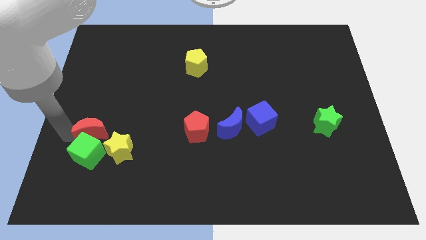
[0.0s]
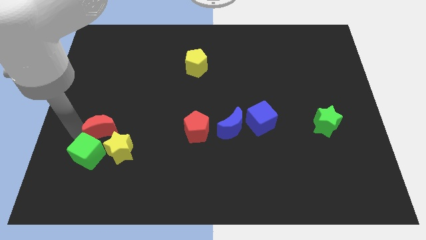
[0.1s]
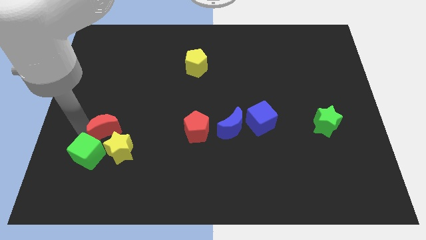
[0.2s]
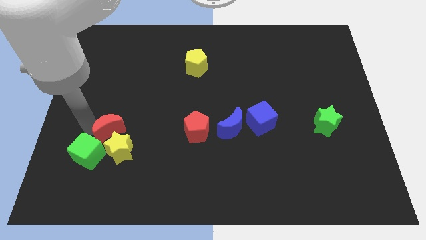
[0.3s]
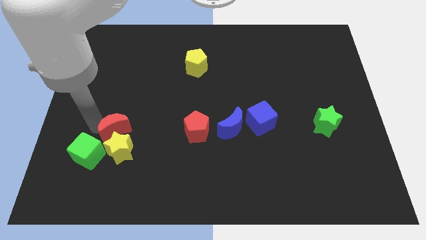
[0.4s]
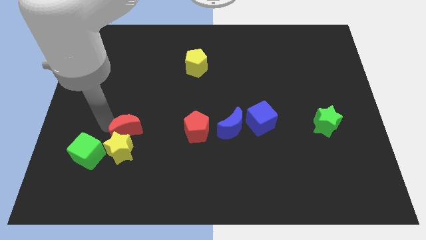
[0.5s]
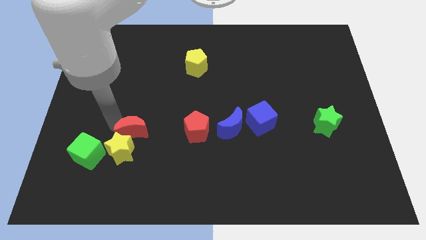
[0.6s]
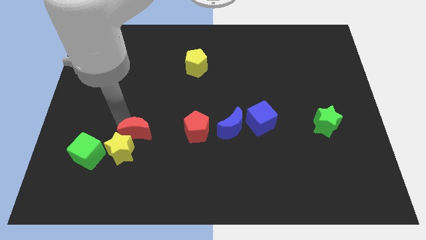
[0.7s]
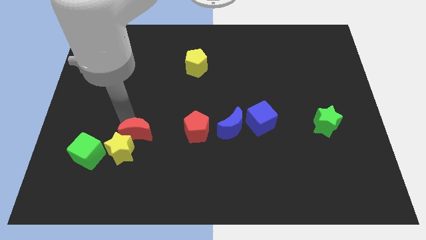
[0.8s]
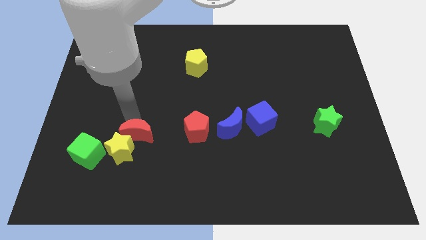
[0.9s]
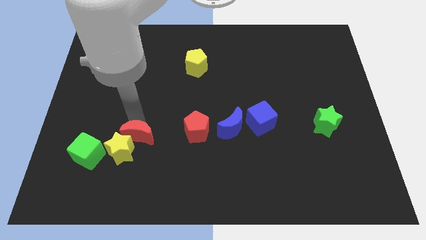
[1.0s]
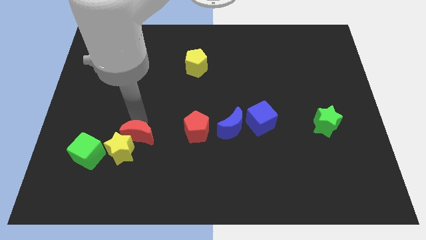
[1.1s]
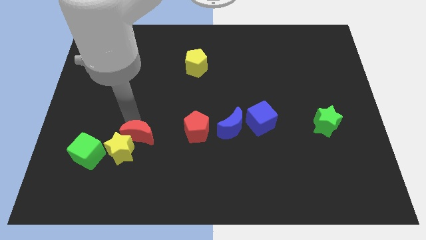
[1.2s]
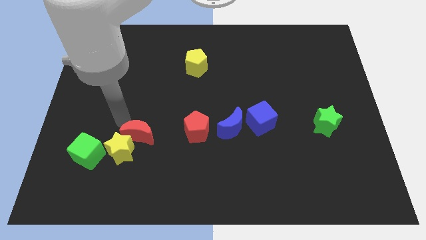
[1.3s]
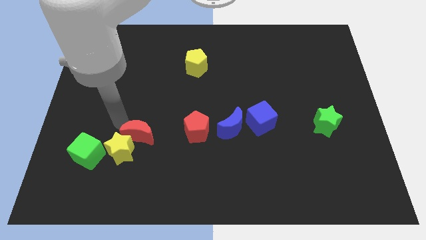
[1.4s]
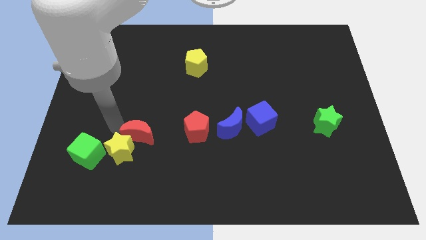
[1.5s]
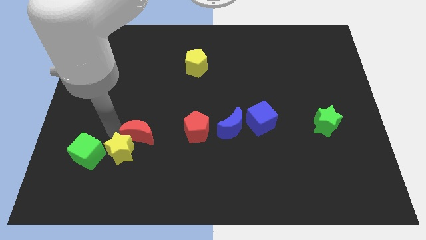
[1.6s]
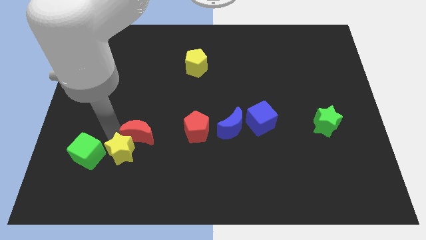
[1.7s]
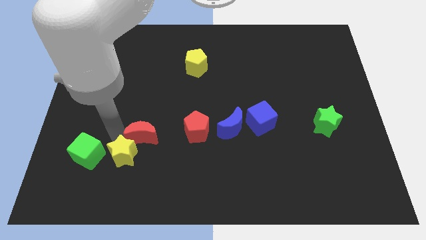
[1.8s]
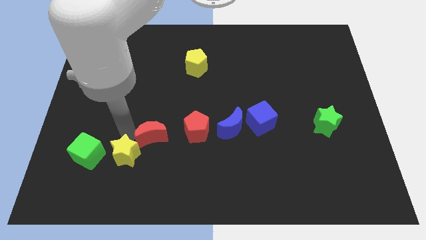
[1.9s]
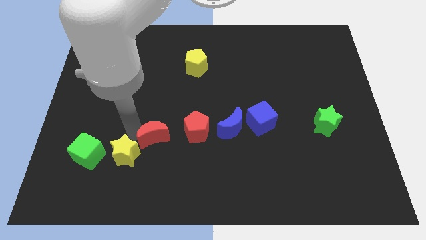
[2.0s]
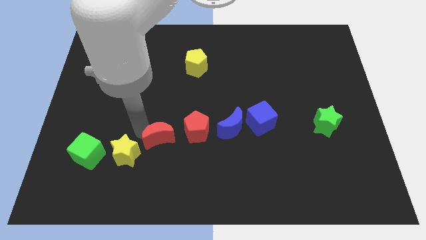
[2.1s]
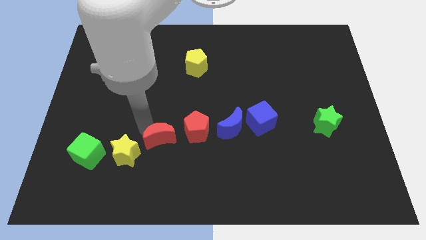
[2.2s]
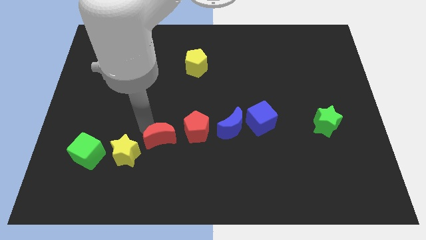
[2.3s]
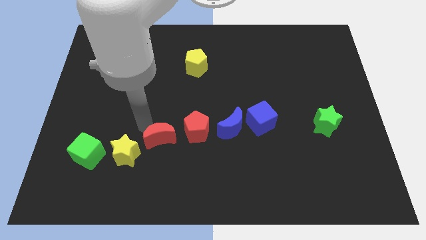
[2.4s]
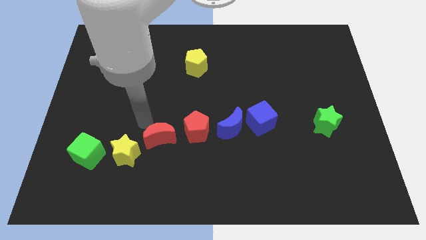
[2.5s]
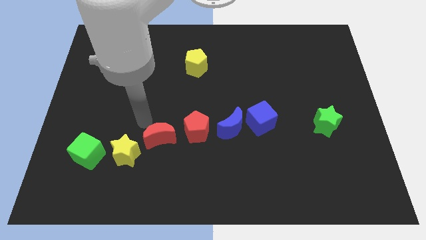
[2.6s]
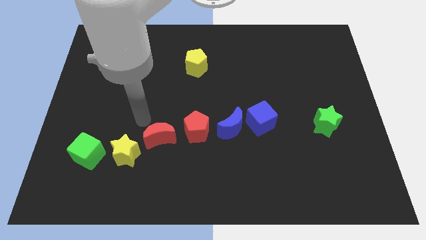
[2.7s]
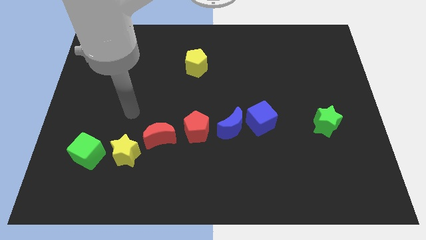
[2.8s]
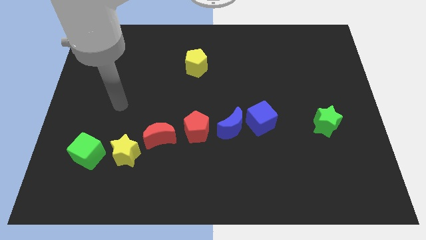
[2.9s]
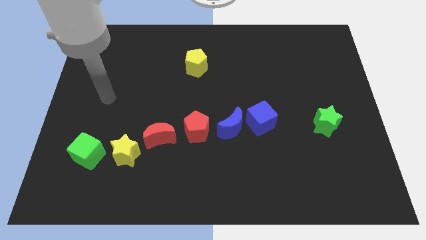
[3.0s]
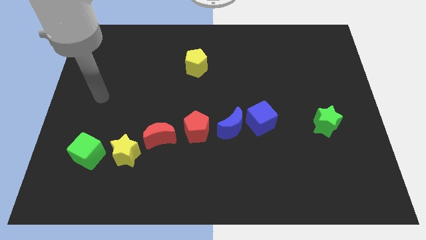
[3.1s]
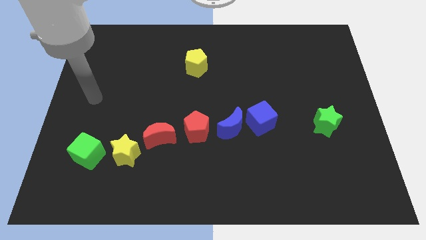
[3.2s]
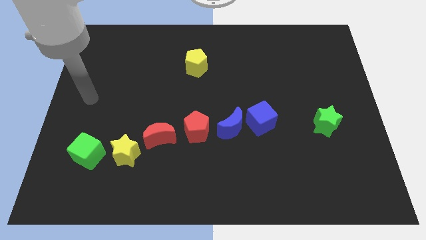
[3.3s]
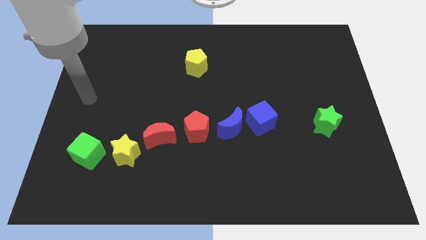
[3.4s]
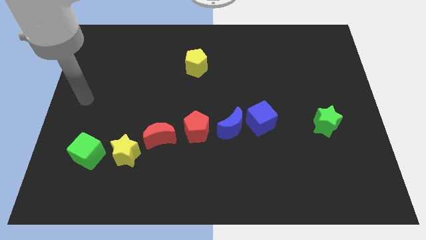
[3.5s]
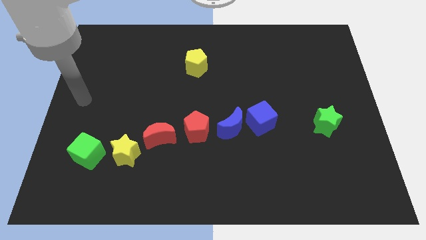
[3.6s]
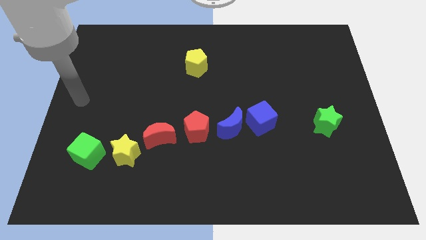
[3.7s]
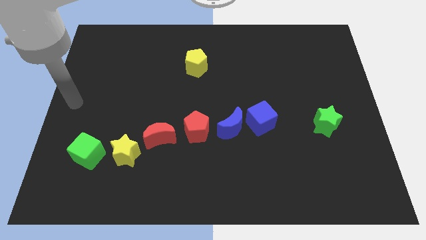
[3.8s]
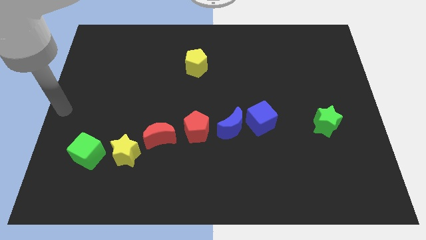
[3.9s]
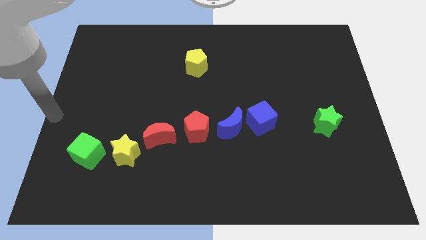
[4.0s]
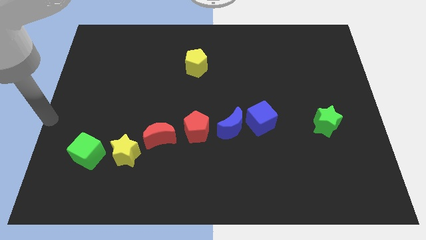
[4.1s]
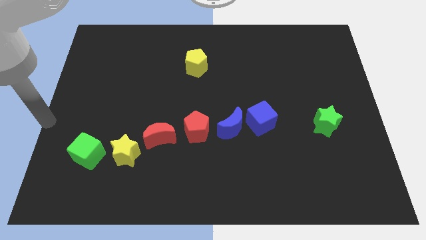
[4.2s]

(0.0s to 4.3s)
place the red moon between the red pentagon and yellow star

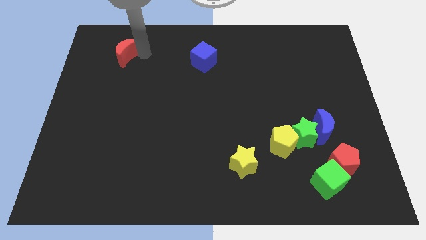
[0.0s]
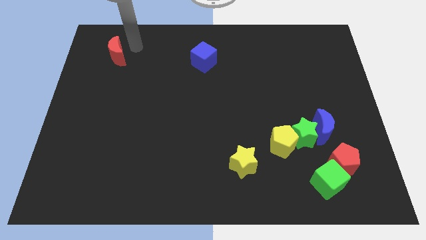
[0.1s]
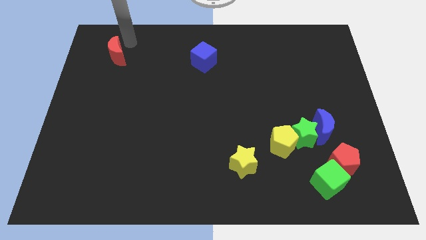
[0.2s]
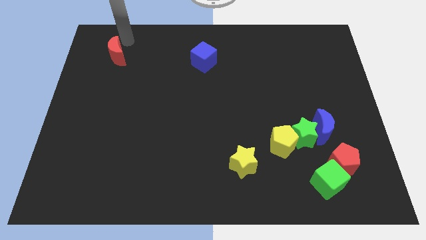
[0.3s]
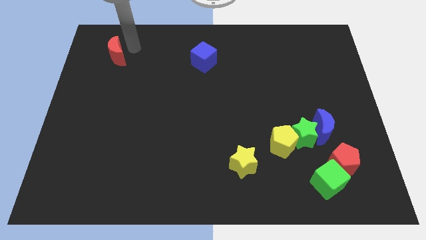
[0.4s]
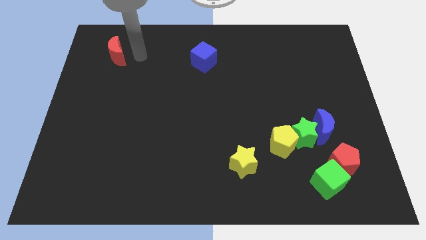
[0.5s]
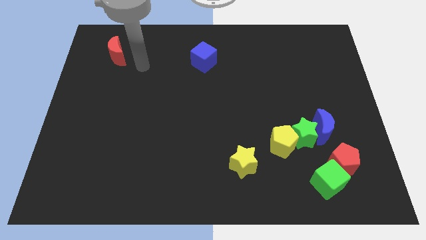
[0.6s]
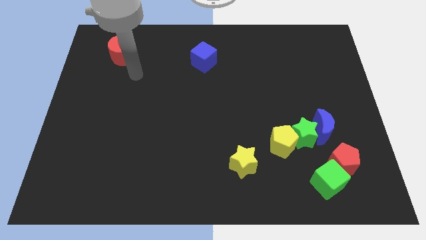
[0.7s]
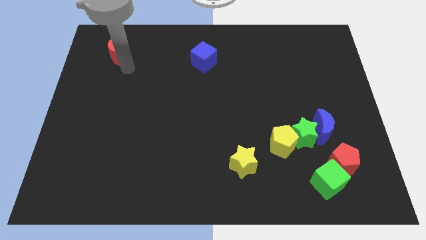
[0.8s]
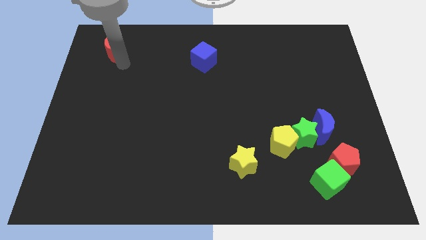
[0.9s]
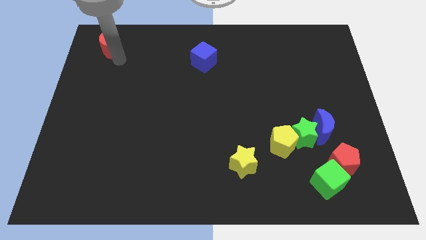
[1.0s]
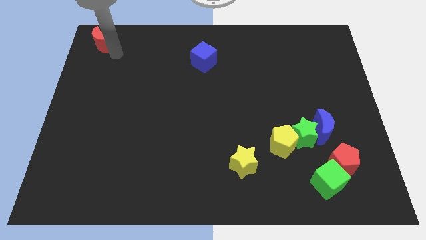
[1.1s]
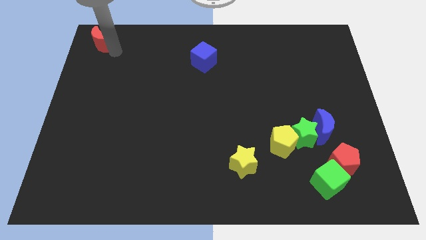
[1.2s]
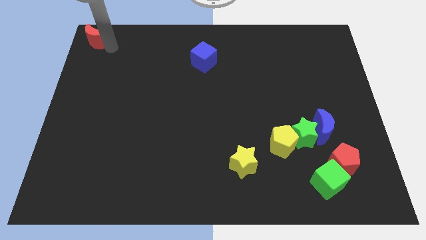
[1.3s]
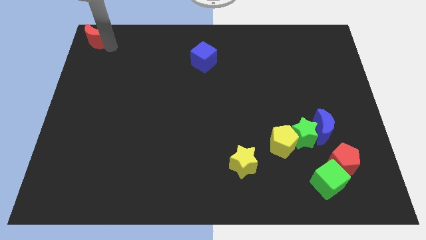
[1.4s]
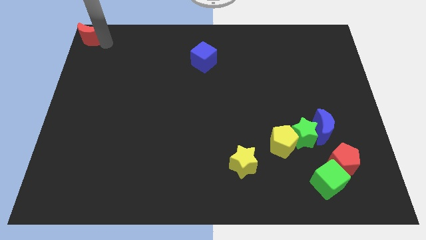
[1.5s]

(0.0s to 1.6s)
move red moon to the top right corner of the board

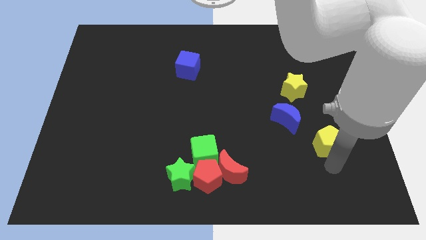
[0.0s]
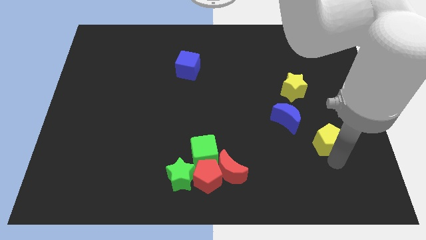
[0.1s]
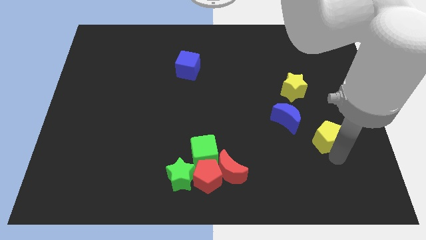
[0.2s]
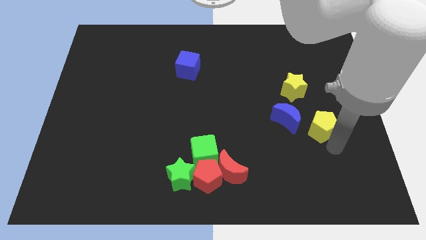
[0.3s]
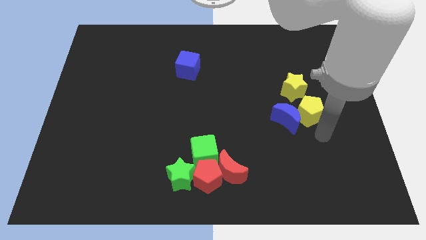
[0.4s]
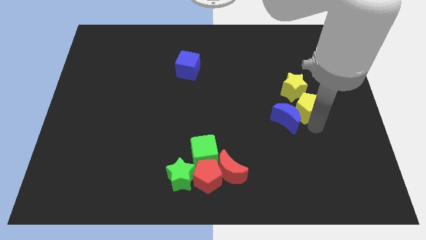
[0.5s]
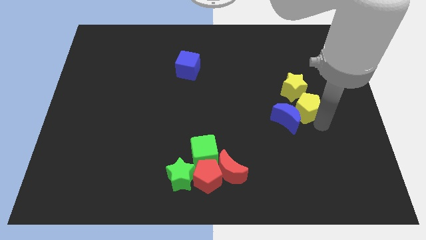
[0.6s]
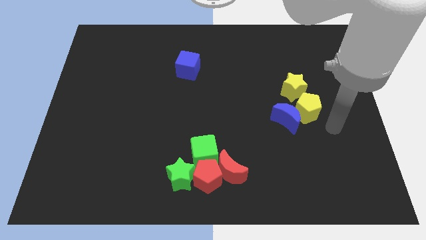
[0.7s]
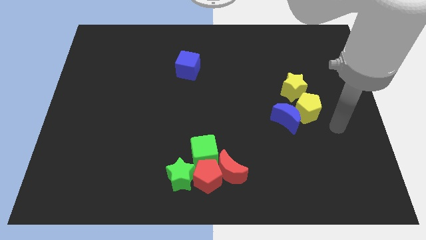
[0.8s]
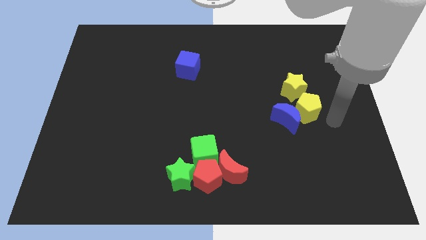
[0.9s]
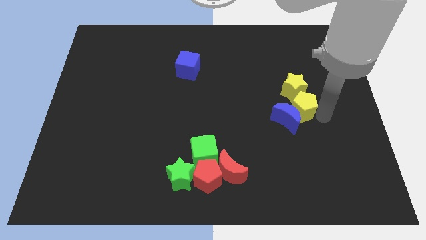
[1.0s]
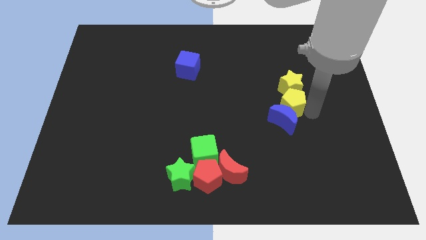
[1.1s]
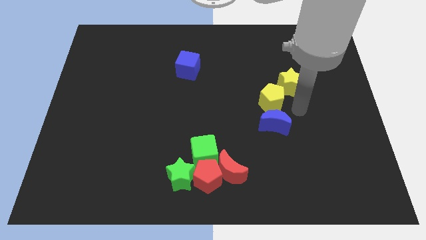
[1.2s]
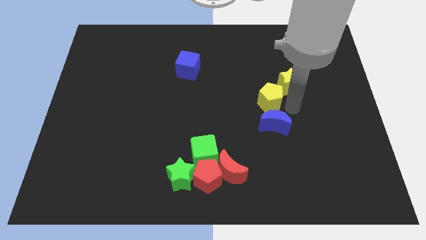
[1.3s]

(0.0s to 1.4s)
move the yellow pentagon above the blue cube

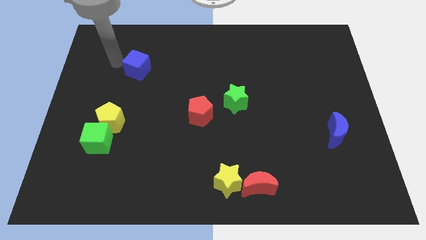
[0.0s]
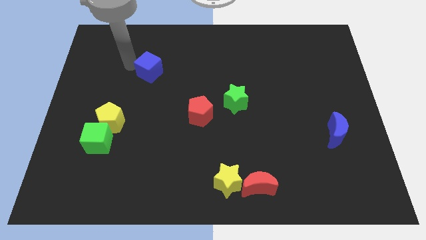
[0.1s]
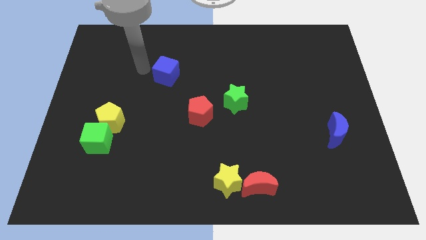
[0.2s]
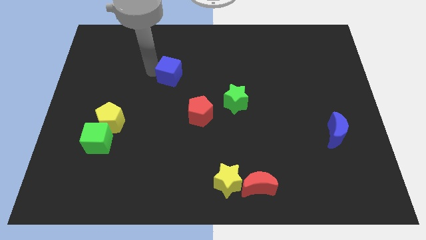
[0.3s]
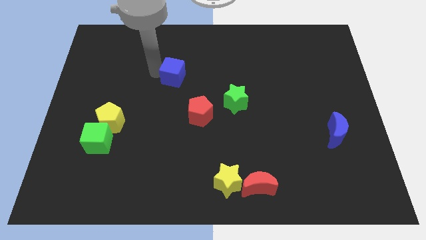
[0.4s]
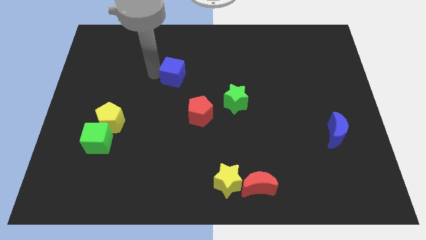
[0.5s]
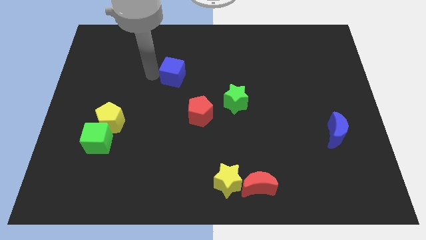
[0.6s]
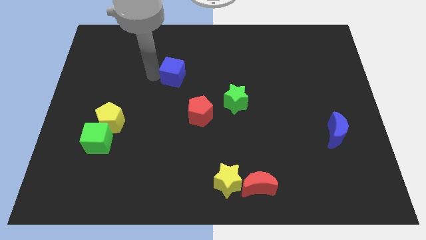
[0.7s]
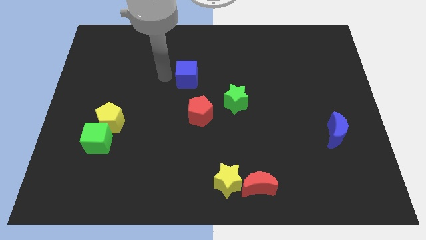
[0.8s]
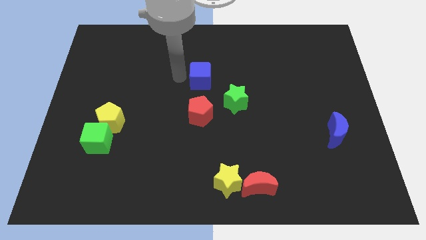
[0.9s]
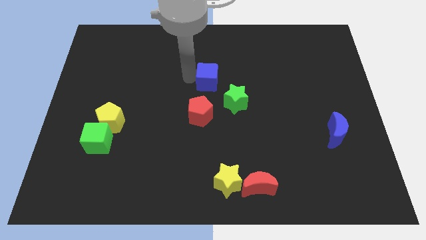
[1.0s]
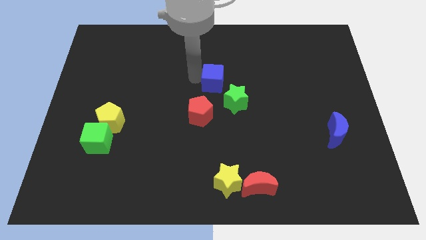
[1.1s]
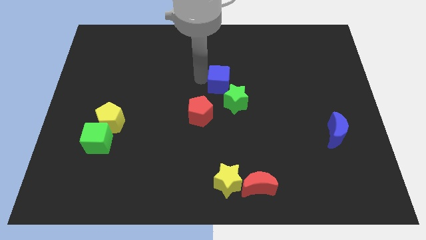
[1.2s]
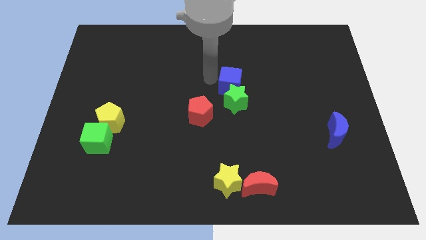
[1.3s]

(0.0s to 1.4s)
push the blue cube into the green star

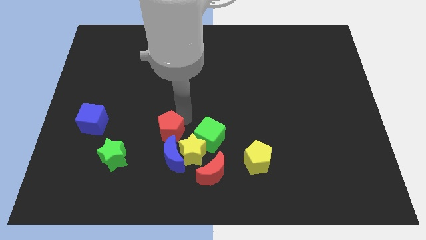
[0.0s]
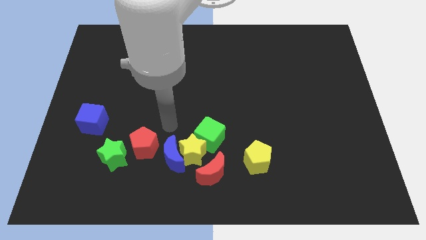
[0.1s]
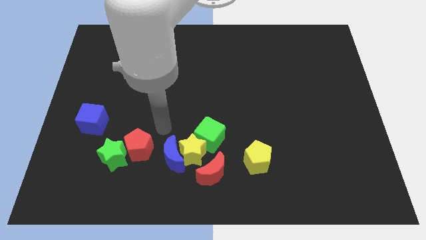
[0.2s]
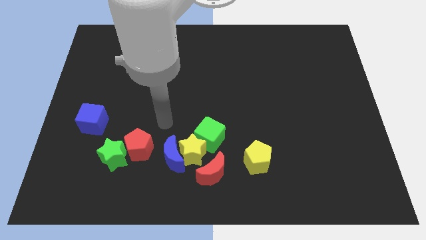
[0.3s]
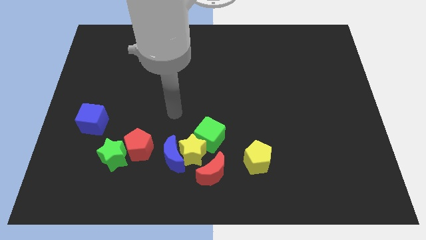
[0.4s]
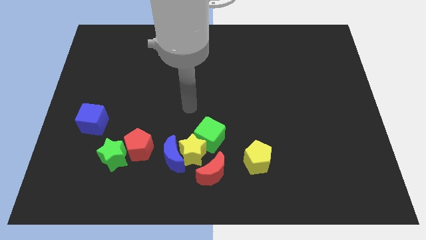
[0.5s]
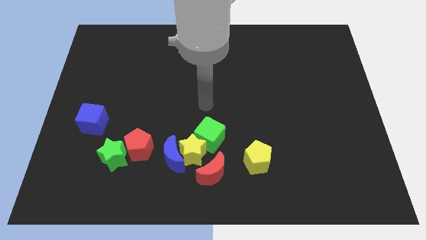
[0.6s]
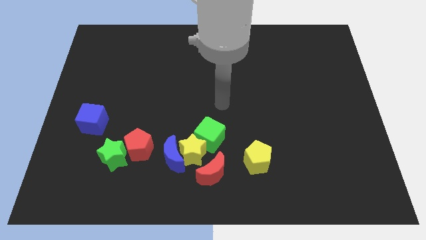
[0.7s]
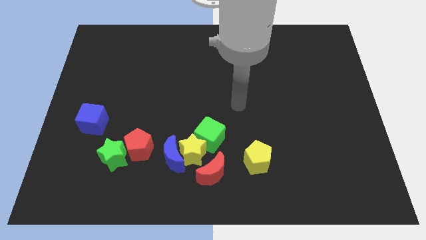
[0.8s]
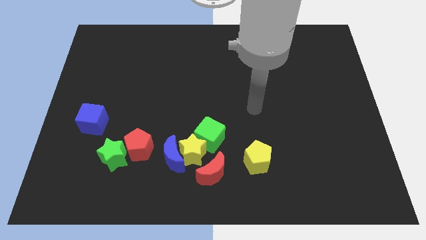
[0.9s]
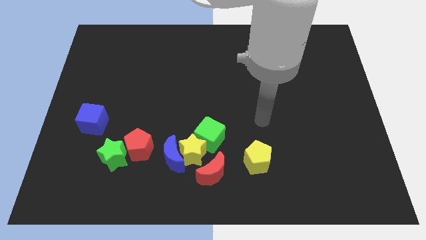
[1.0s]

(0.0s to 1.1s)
push the red pentagon close to the green star on the board
